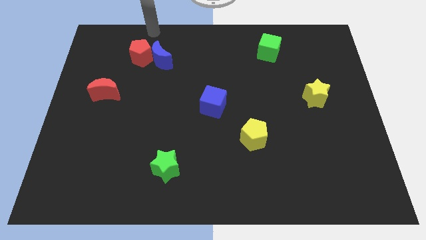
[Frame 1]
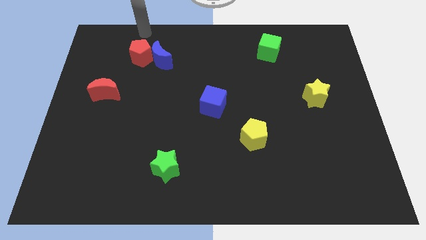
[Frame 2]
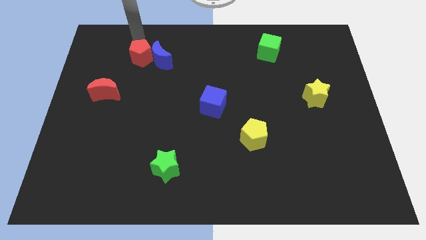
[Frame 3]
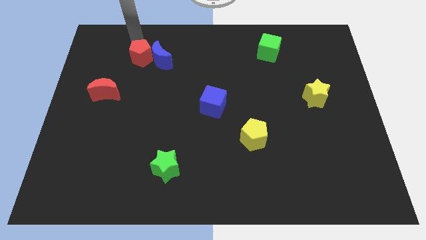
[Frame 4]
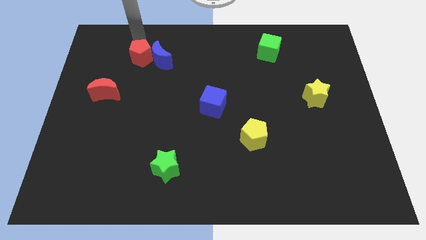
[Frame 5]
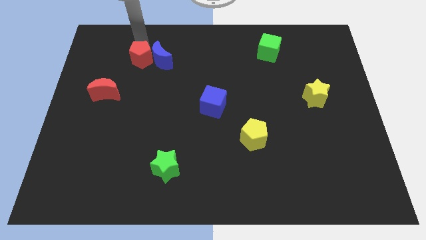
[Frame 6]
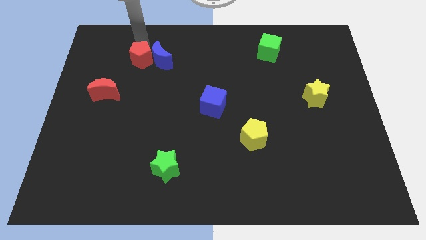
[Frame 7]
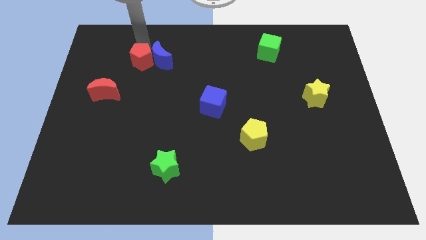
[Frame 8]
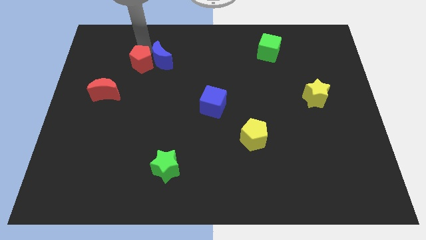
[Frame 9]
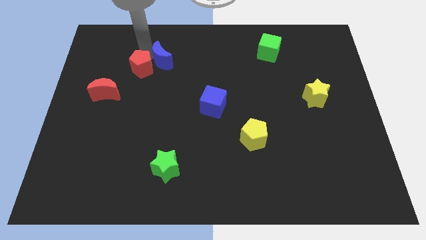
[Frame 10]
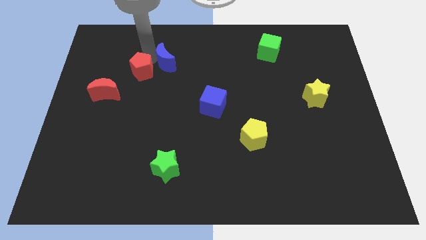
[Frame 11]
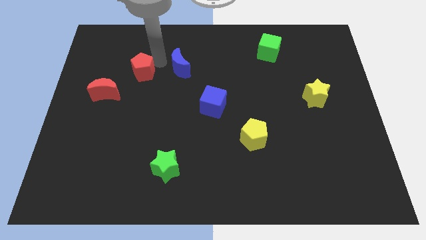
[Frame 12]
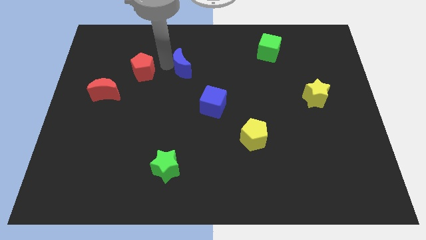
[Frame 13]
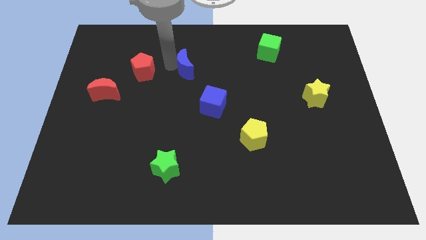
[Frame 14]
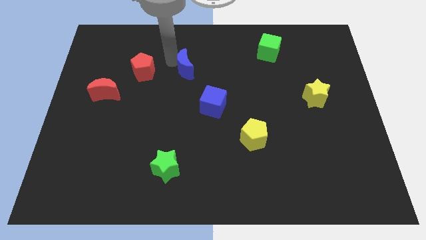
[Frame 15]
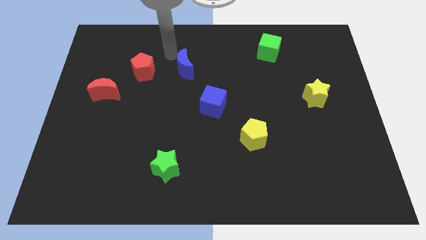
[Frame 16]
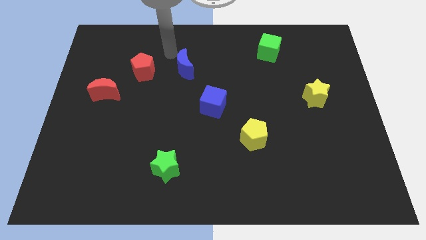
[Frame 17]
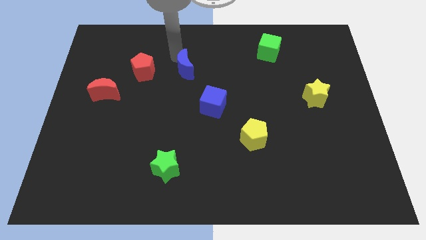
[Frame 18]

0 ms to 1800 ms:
separate the red pentagon and the blue moon

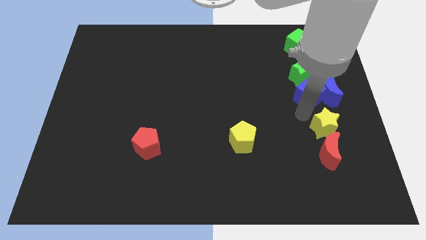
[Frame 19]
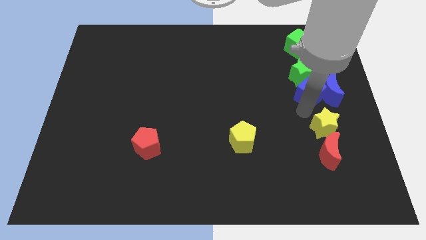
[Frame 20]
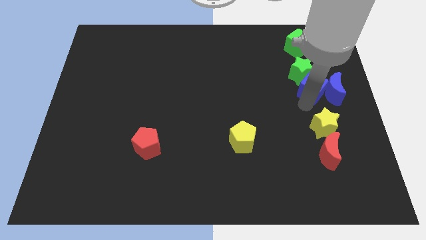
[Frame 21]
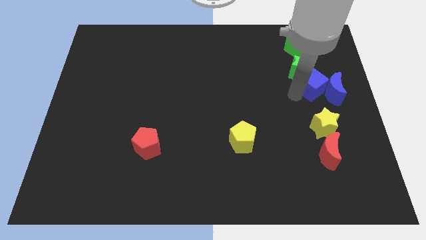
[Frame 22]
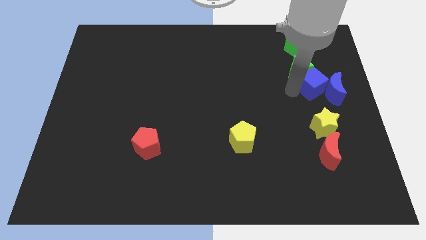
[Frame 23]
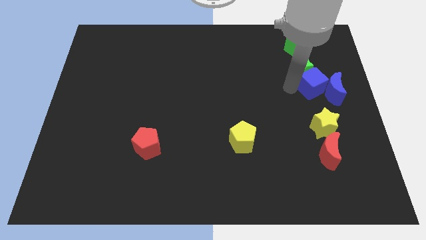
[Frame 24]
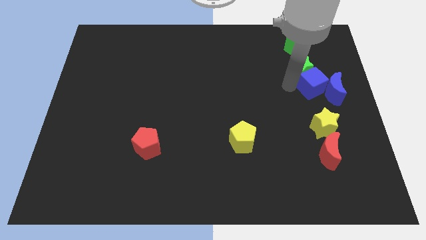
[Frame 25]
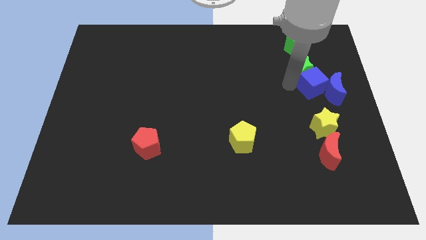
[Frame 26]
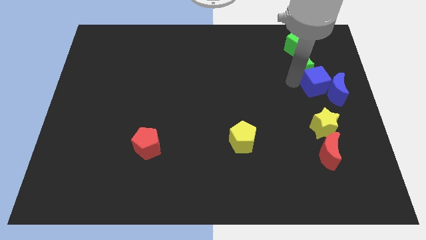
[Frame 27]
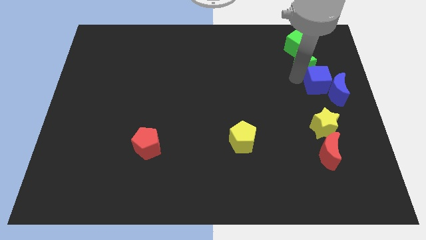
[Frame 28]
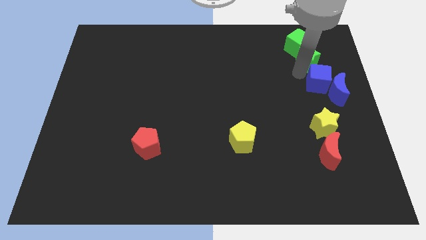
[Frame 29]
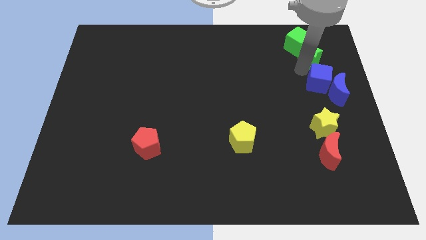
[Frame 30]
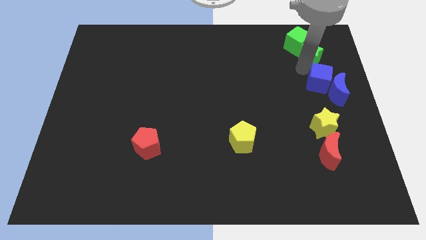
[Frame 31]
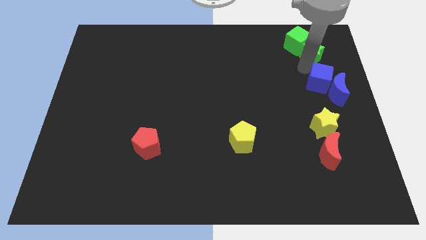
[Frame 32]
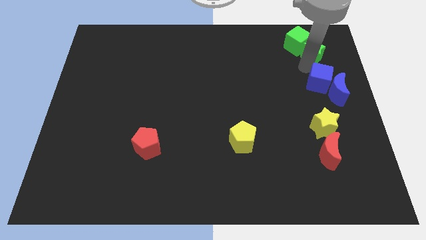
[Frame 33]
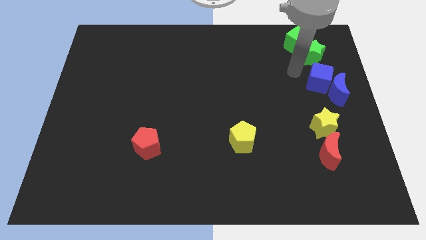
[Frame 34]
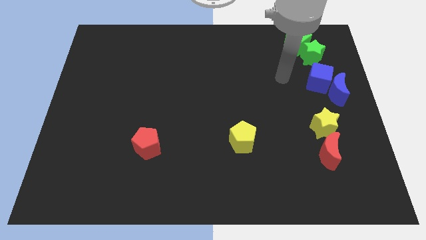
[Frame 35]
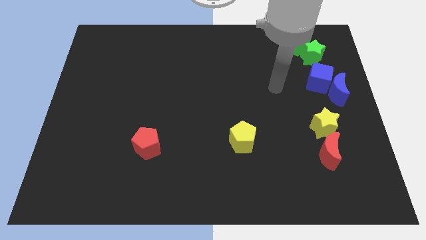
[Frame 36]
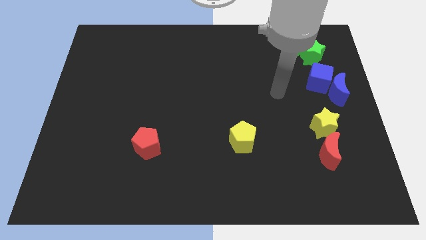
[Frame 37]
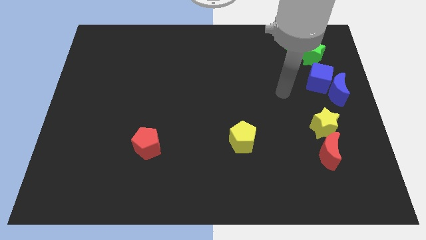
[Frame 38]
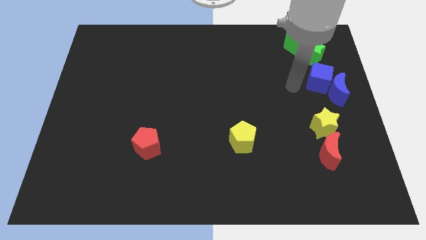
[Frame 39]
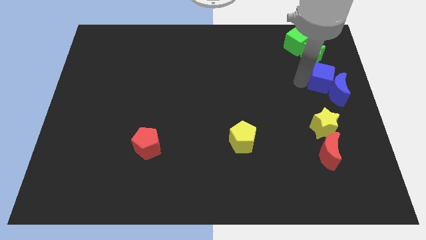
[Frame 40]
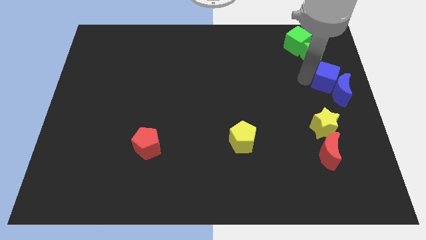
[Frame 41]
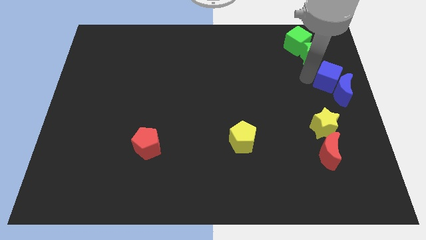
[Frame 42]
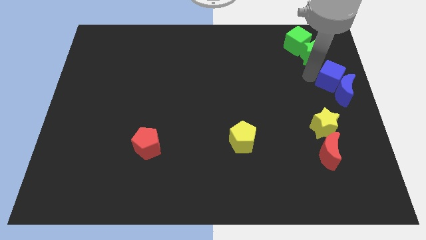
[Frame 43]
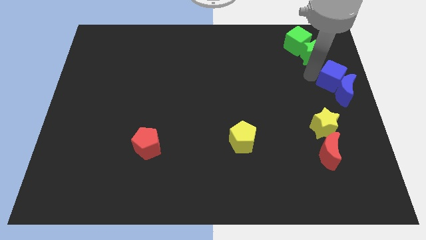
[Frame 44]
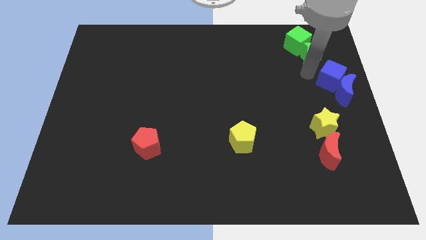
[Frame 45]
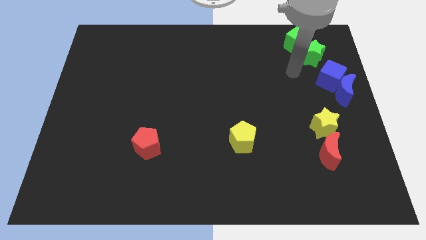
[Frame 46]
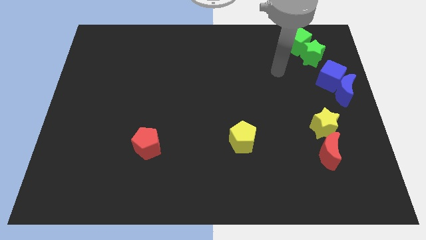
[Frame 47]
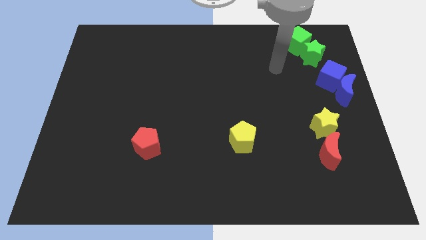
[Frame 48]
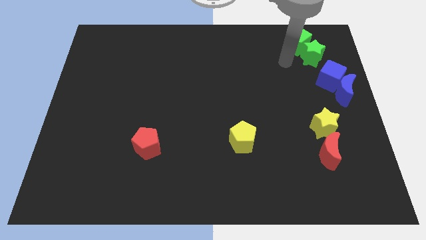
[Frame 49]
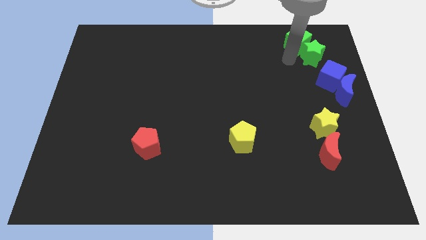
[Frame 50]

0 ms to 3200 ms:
move the green star and blue cube diagonally in between the green cube and blue crescent

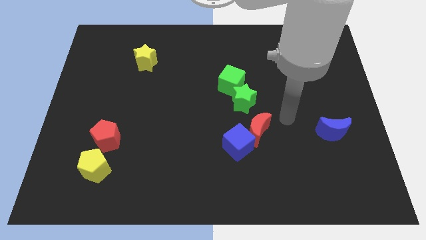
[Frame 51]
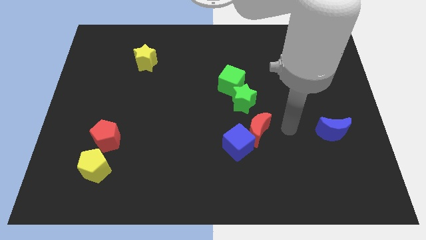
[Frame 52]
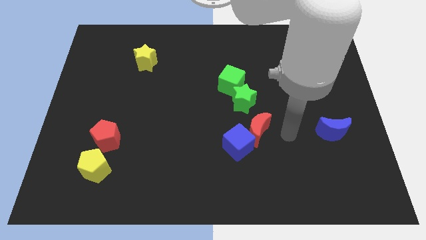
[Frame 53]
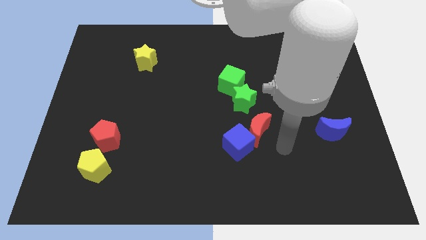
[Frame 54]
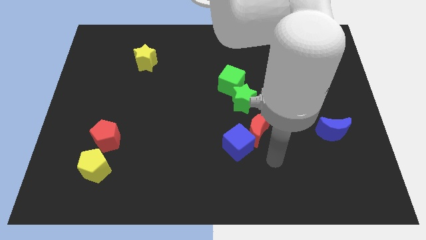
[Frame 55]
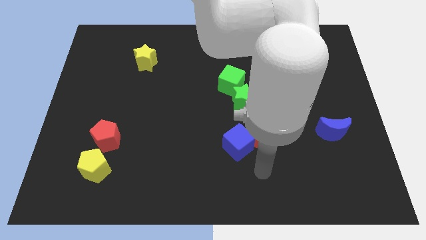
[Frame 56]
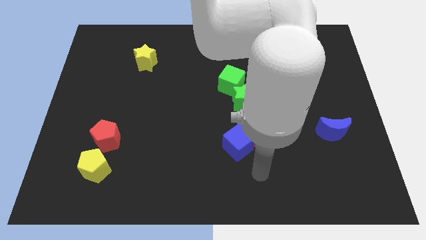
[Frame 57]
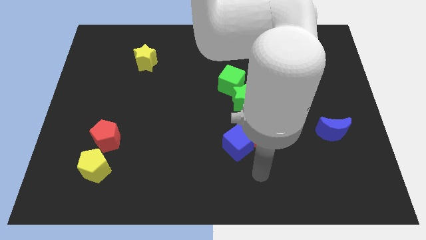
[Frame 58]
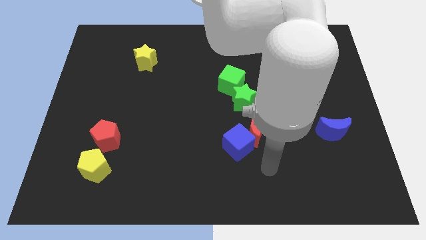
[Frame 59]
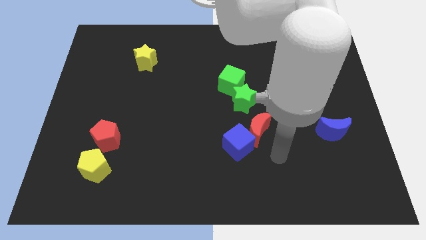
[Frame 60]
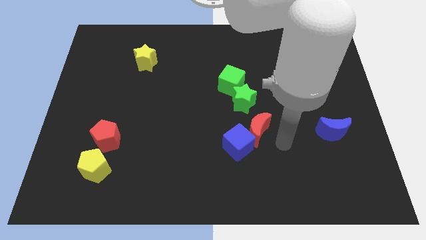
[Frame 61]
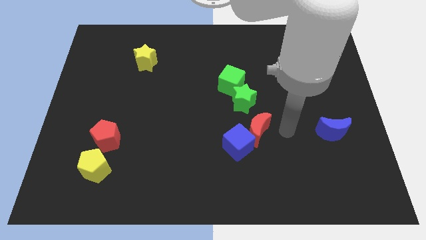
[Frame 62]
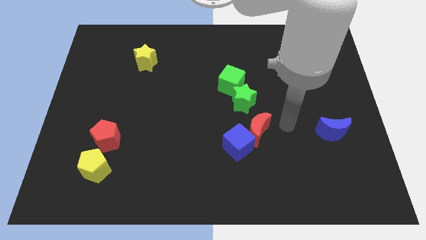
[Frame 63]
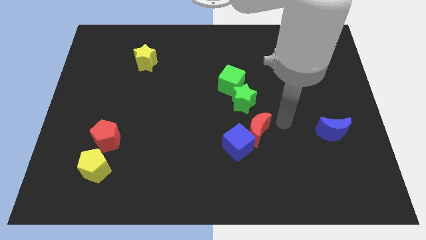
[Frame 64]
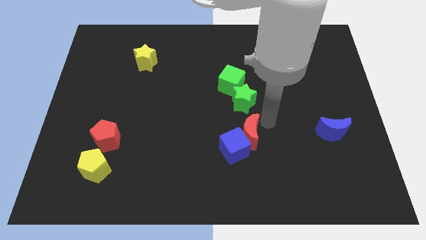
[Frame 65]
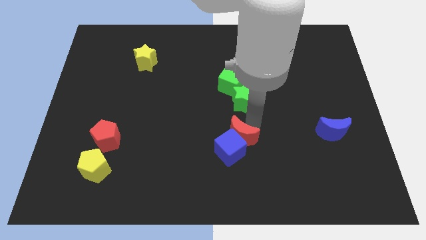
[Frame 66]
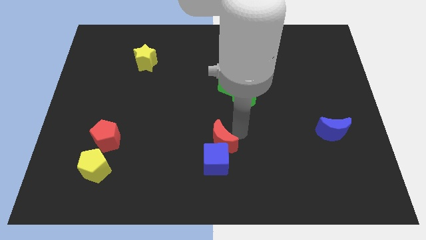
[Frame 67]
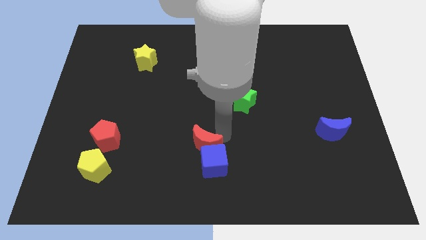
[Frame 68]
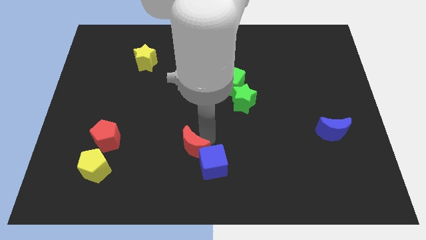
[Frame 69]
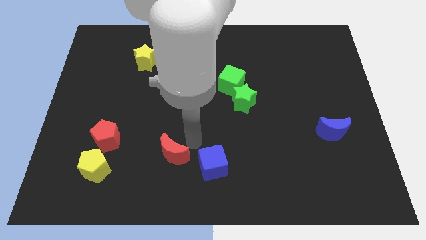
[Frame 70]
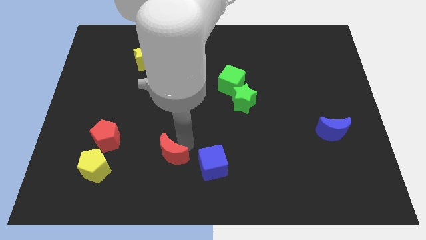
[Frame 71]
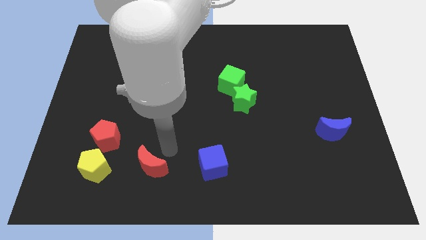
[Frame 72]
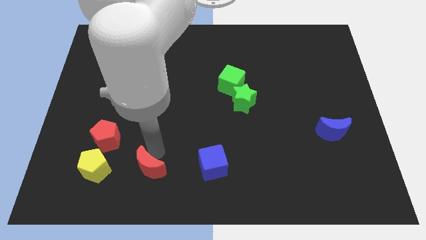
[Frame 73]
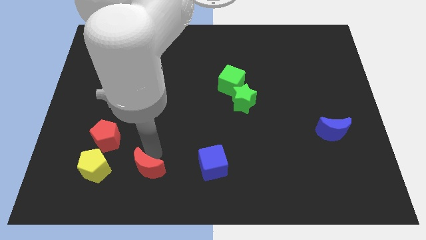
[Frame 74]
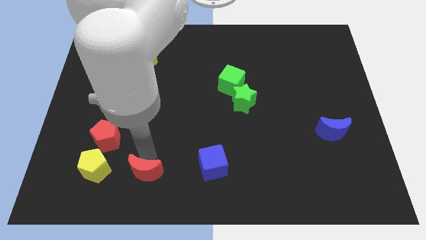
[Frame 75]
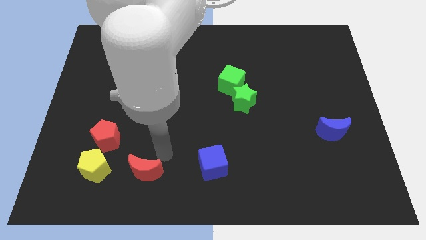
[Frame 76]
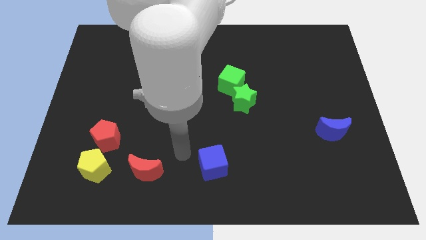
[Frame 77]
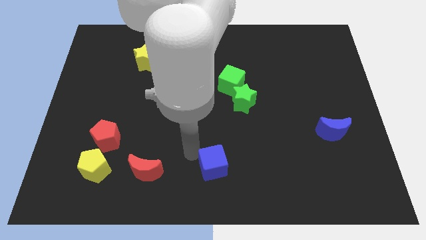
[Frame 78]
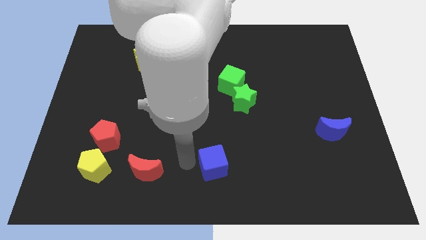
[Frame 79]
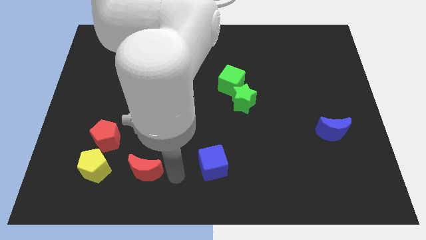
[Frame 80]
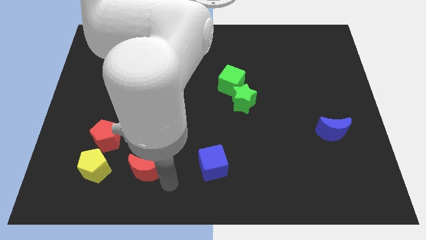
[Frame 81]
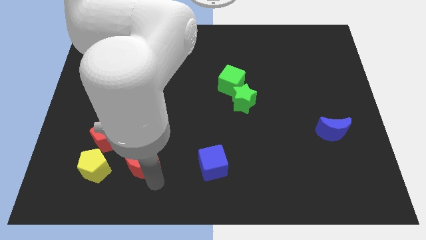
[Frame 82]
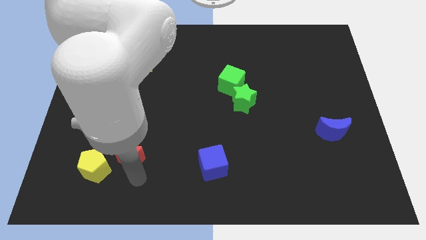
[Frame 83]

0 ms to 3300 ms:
separate the red crescent from the blue cube

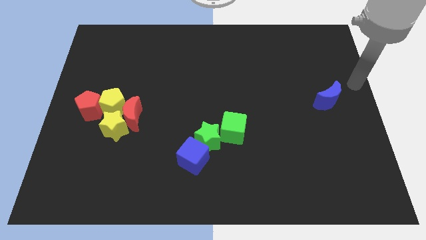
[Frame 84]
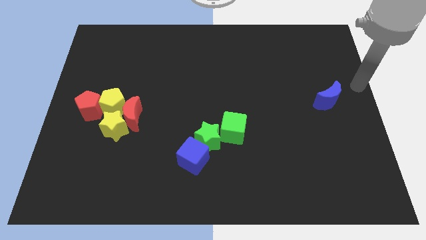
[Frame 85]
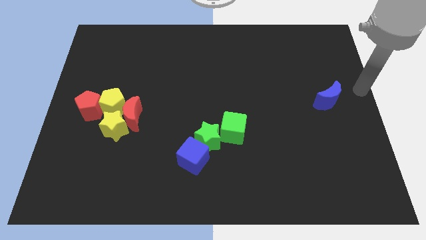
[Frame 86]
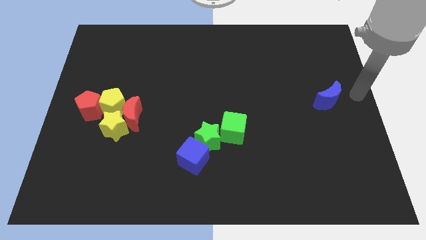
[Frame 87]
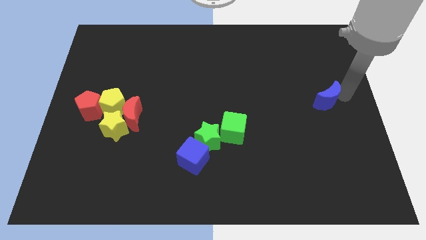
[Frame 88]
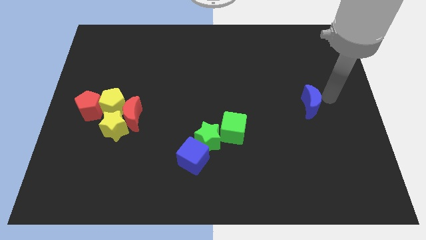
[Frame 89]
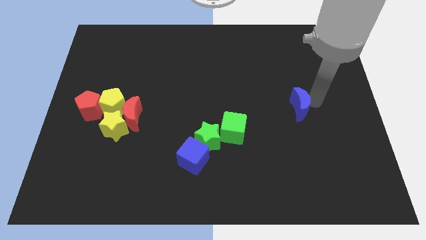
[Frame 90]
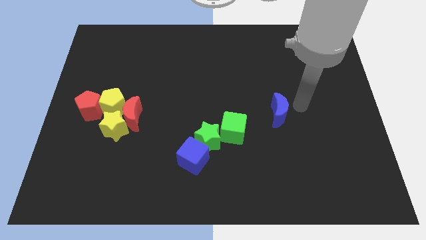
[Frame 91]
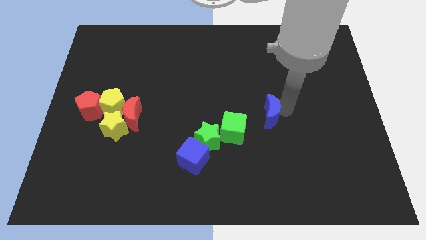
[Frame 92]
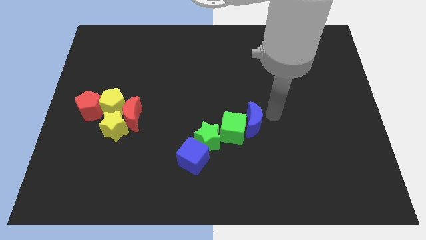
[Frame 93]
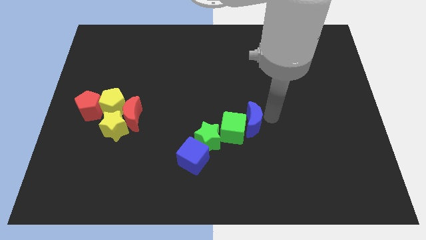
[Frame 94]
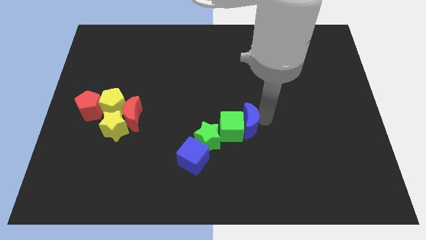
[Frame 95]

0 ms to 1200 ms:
place the blue moon to the right side of green cube
